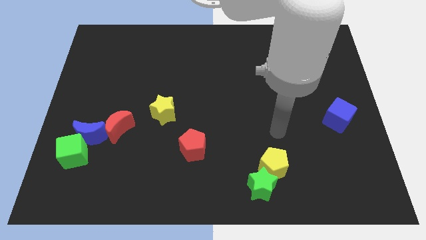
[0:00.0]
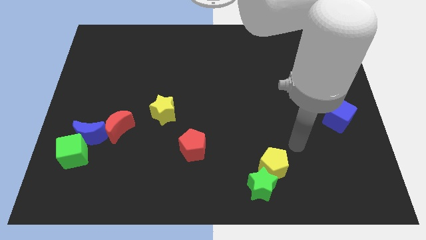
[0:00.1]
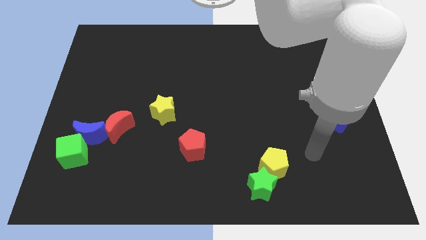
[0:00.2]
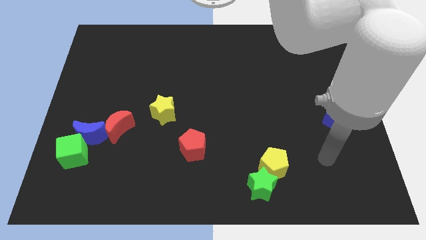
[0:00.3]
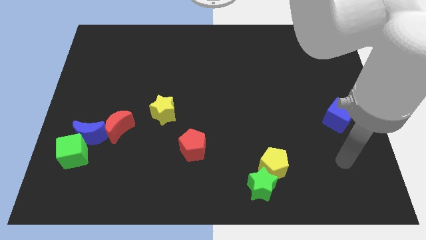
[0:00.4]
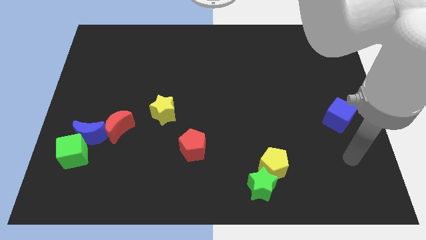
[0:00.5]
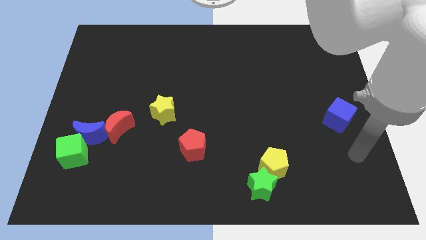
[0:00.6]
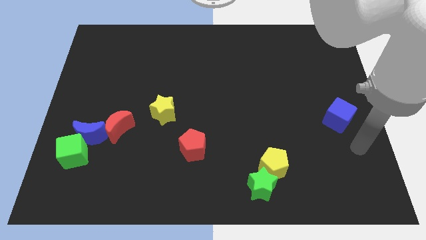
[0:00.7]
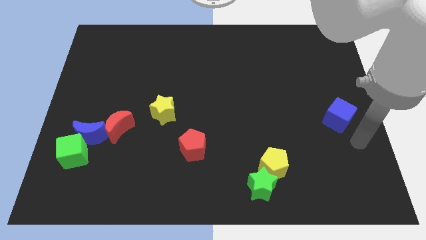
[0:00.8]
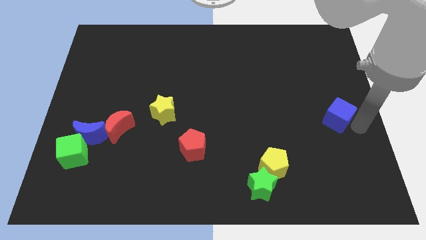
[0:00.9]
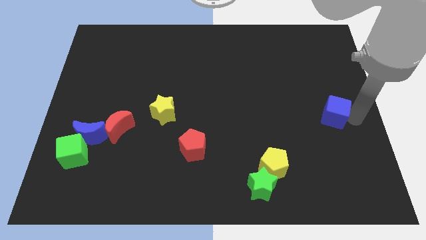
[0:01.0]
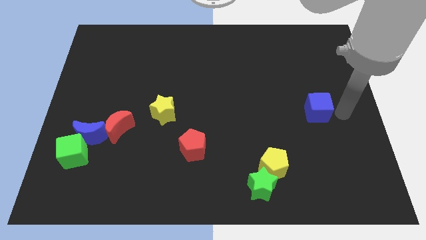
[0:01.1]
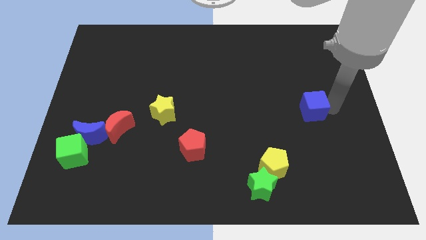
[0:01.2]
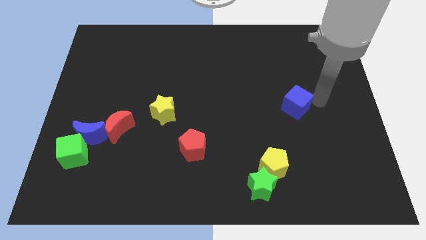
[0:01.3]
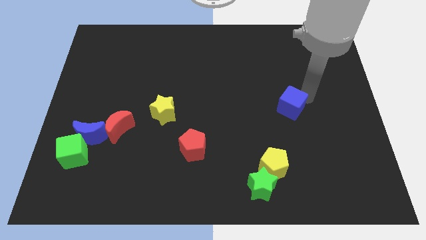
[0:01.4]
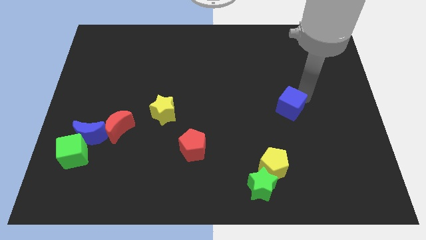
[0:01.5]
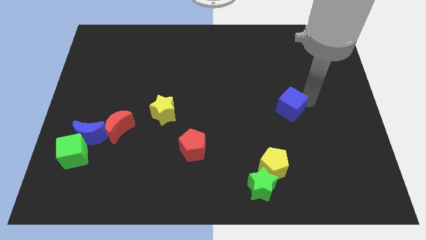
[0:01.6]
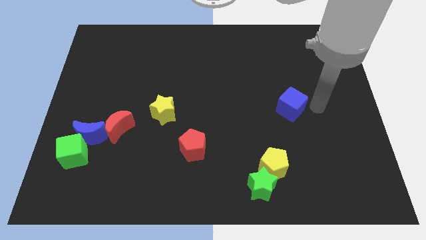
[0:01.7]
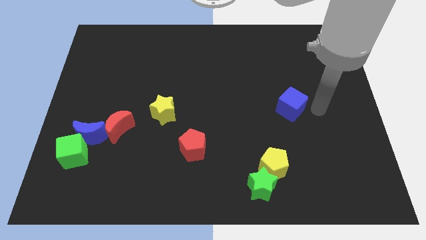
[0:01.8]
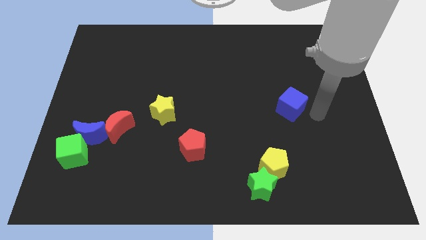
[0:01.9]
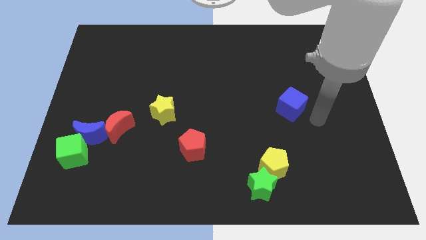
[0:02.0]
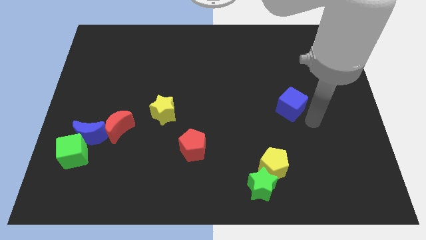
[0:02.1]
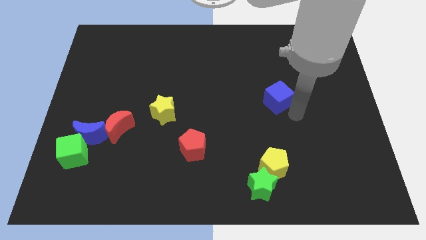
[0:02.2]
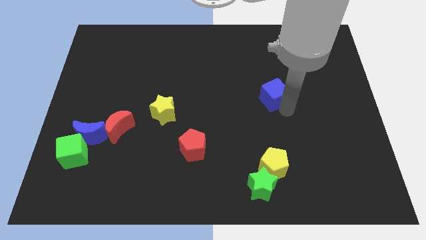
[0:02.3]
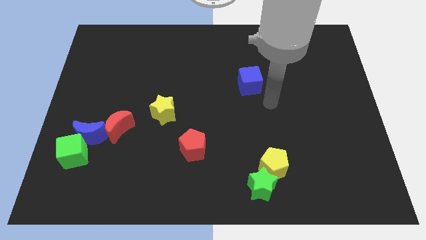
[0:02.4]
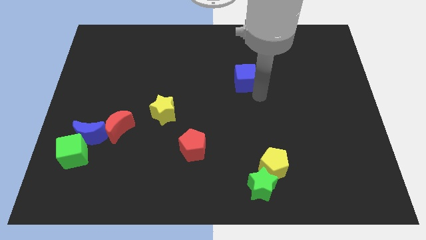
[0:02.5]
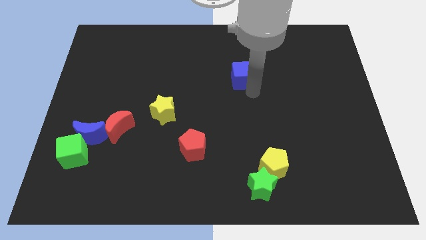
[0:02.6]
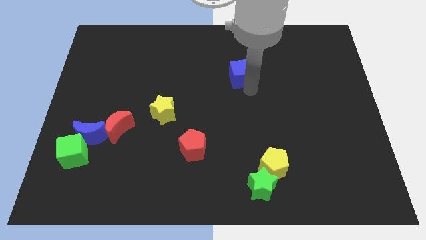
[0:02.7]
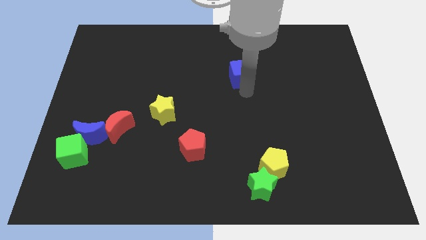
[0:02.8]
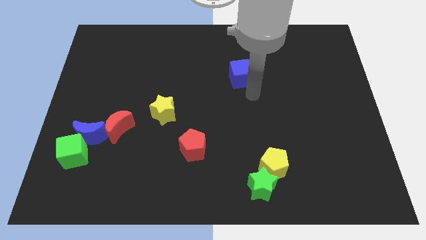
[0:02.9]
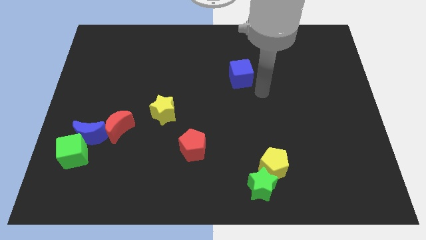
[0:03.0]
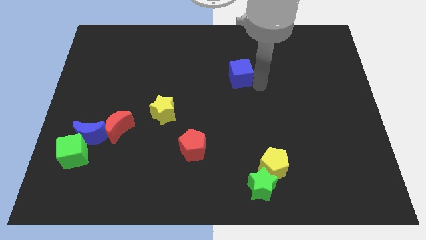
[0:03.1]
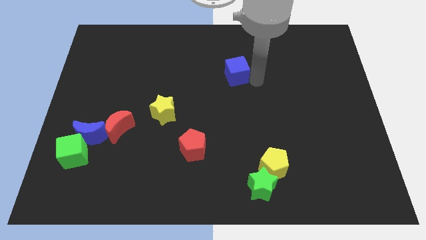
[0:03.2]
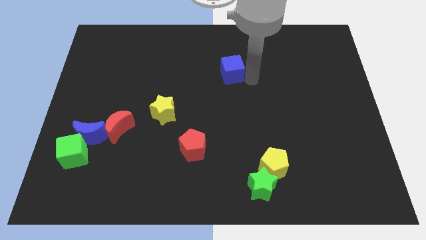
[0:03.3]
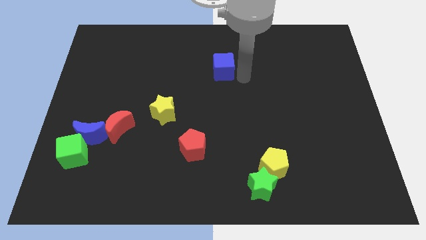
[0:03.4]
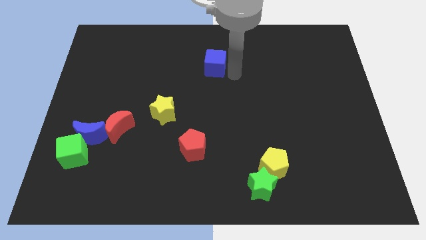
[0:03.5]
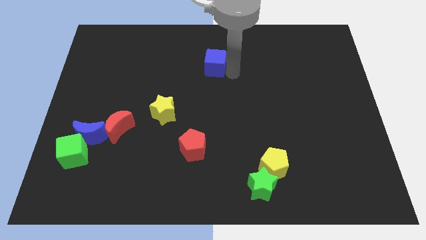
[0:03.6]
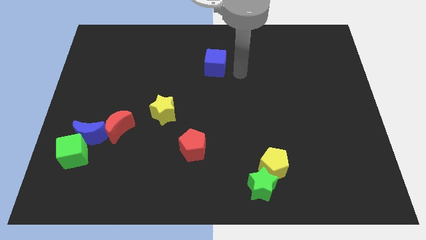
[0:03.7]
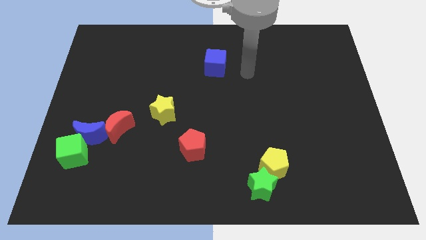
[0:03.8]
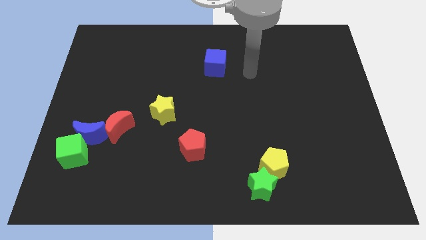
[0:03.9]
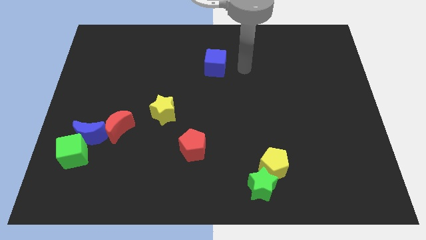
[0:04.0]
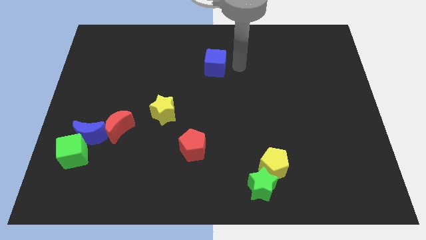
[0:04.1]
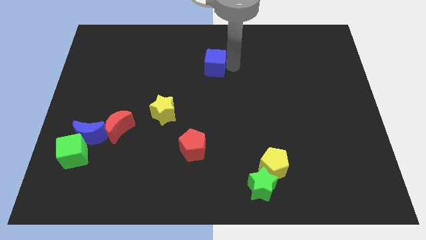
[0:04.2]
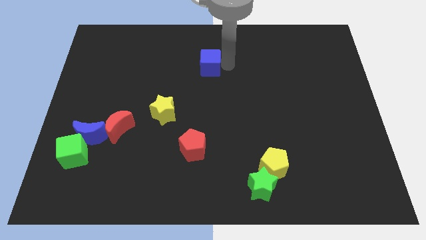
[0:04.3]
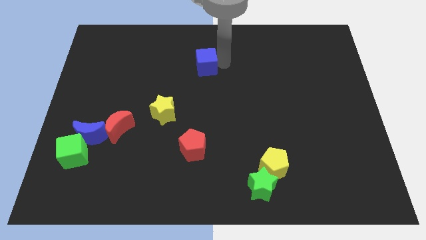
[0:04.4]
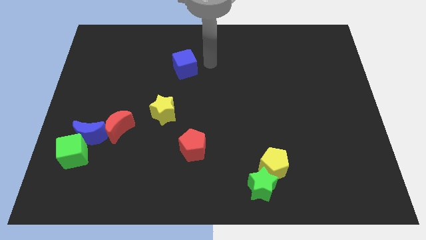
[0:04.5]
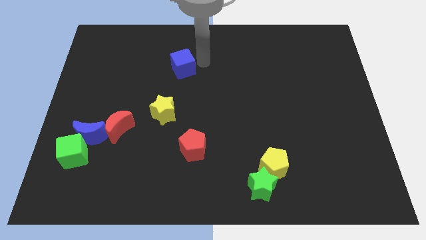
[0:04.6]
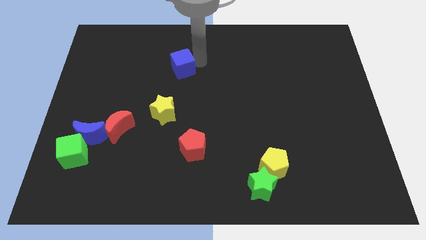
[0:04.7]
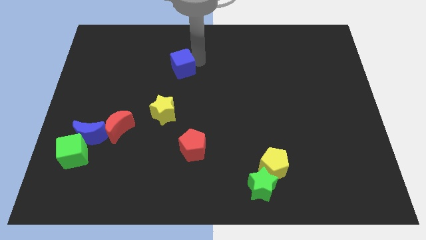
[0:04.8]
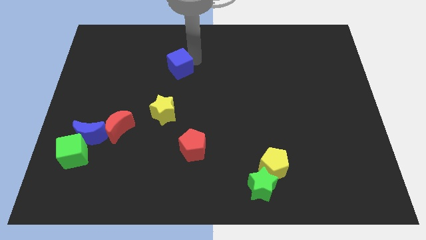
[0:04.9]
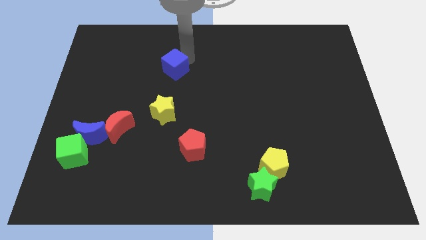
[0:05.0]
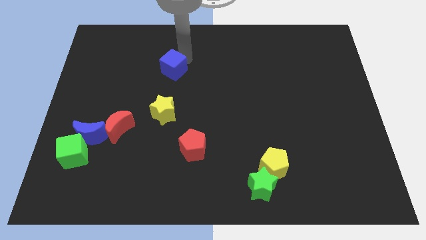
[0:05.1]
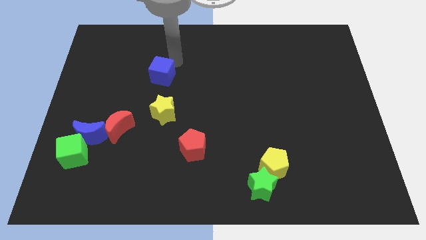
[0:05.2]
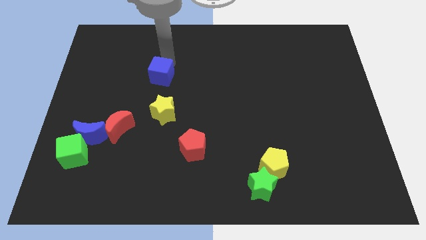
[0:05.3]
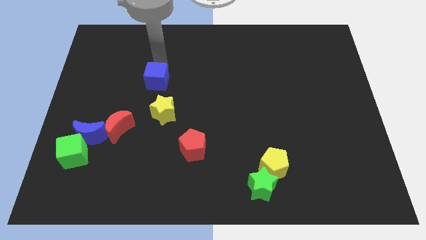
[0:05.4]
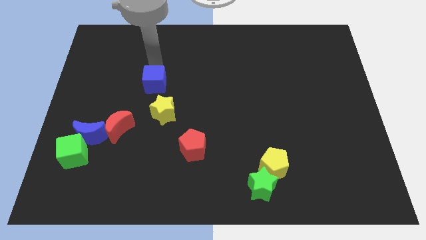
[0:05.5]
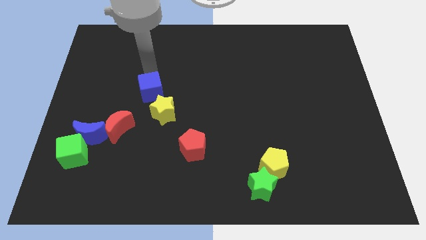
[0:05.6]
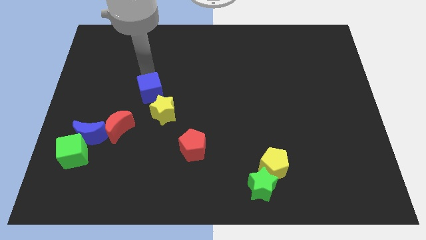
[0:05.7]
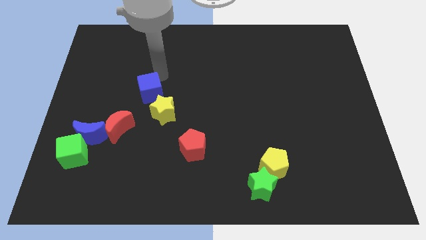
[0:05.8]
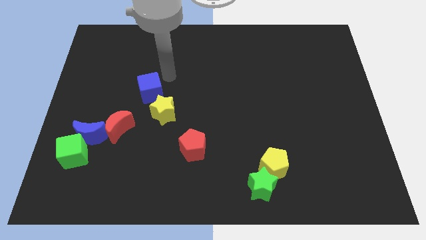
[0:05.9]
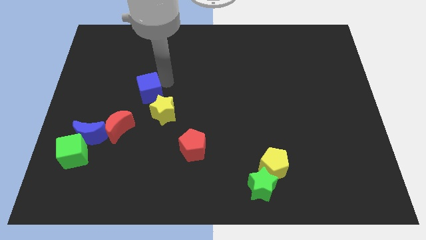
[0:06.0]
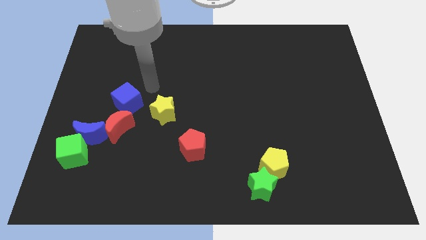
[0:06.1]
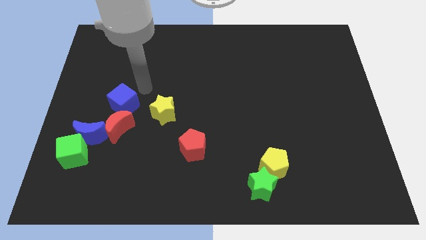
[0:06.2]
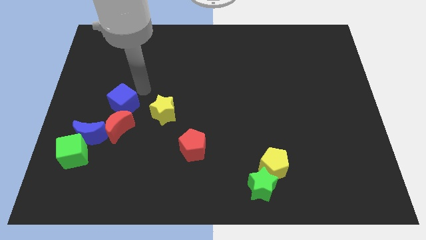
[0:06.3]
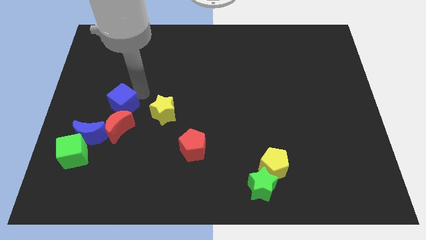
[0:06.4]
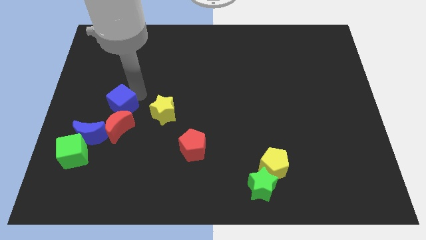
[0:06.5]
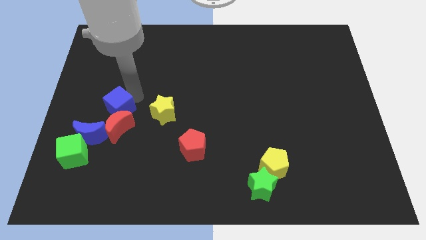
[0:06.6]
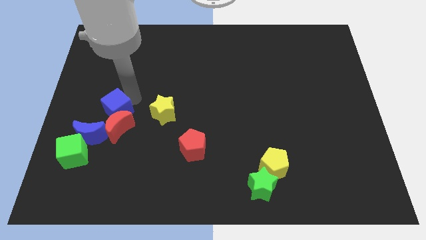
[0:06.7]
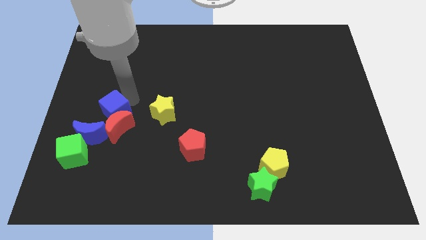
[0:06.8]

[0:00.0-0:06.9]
push the blue cube next to the red moon

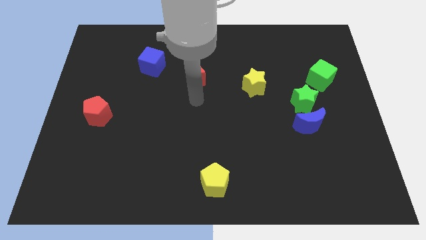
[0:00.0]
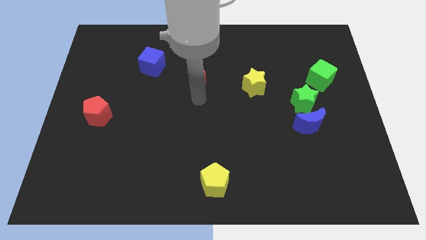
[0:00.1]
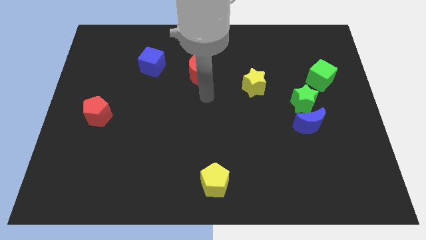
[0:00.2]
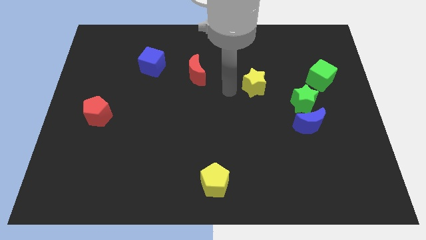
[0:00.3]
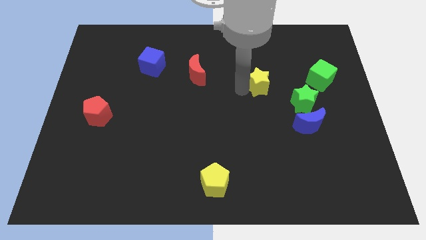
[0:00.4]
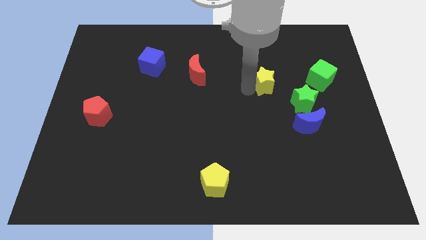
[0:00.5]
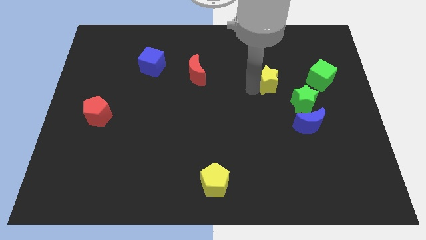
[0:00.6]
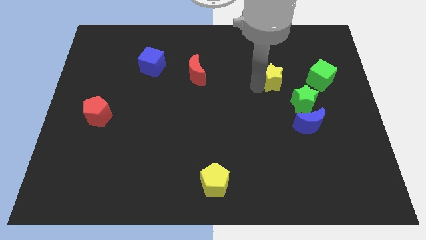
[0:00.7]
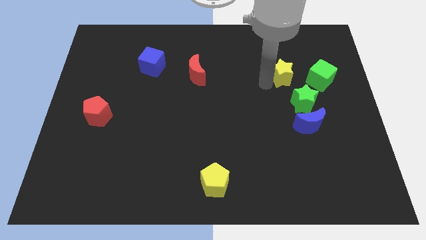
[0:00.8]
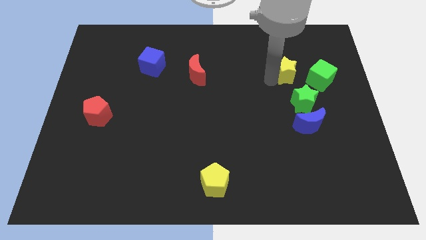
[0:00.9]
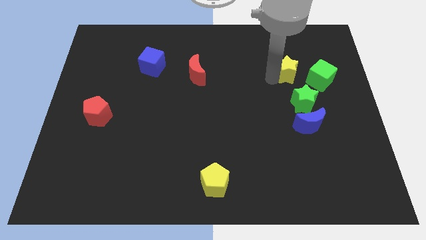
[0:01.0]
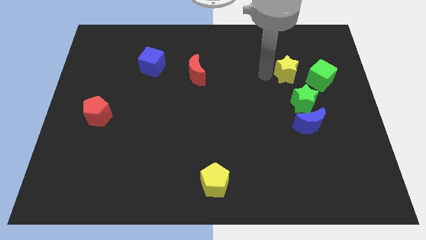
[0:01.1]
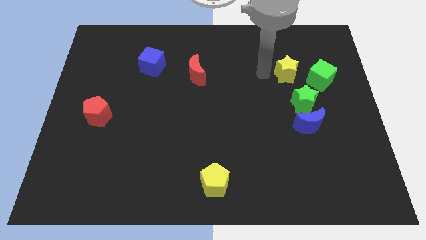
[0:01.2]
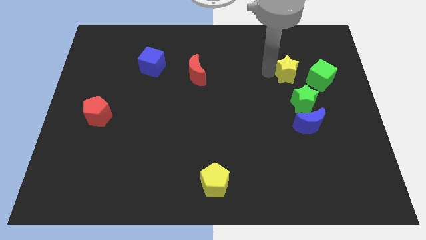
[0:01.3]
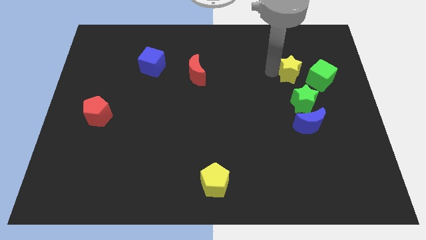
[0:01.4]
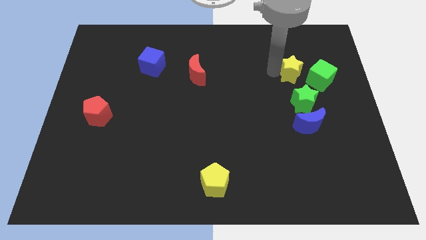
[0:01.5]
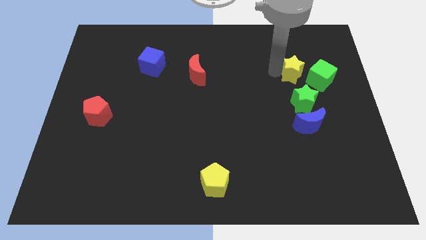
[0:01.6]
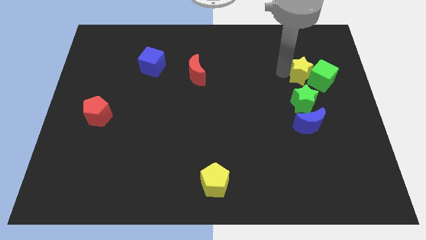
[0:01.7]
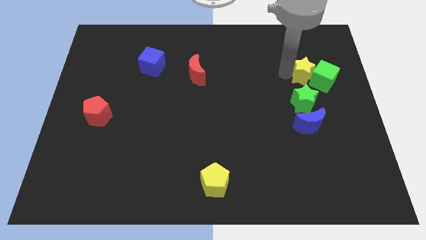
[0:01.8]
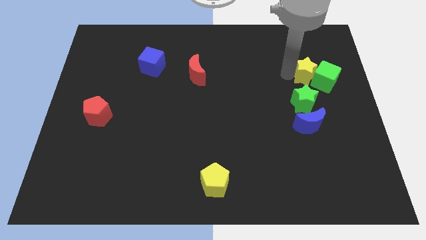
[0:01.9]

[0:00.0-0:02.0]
put the yellow star to the green cube
